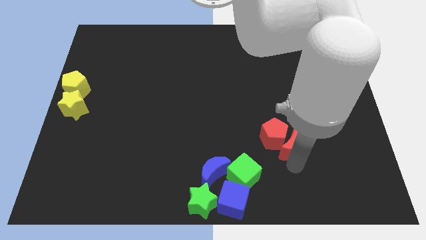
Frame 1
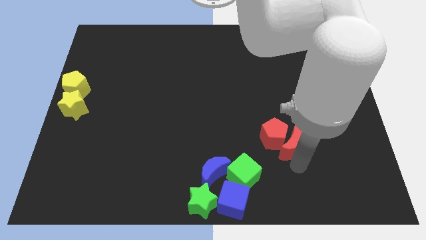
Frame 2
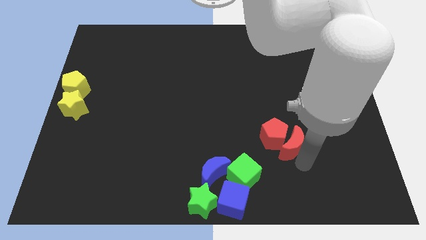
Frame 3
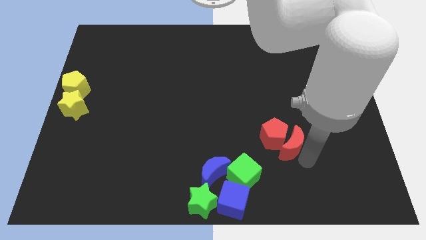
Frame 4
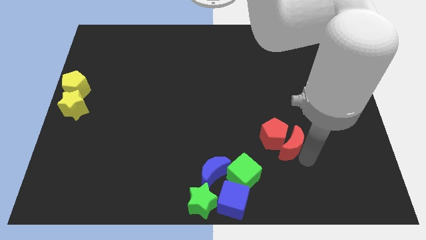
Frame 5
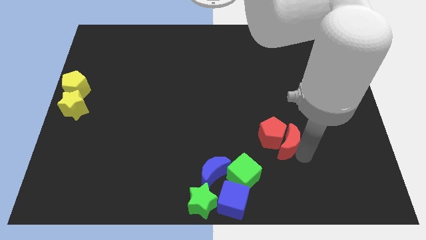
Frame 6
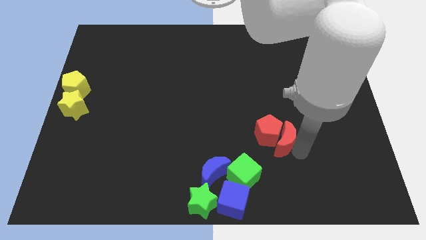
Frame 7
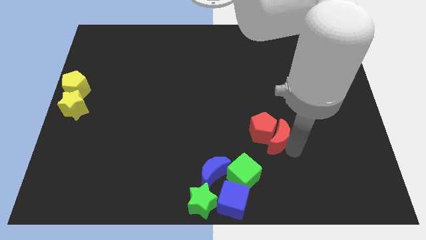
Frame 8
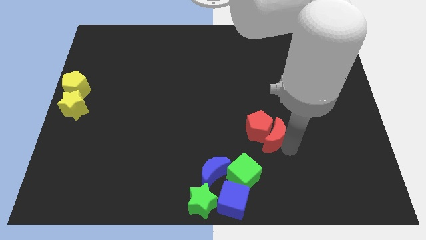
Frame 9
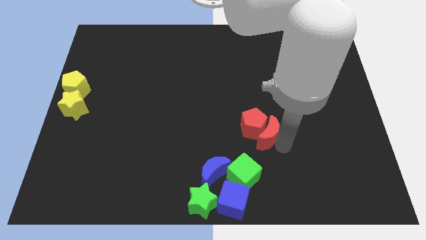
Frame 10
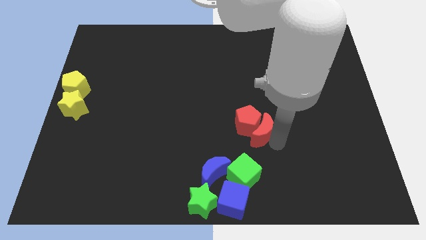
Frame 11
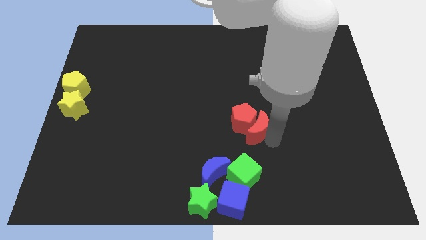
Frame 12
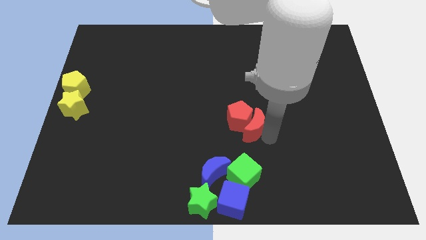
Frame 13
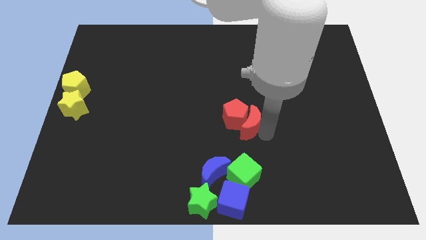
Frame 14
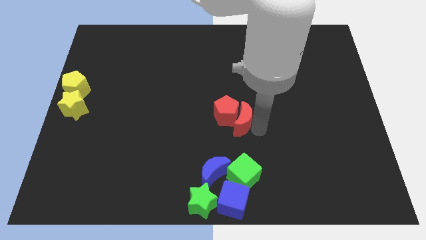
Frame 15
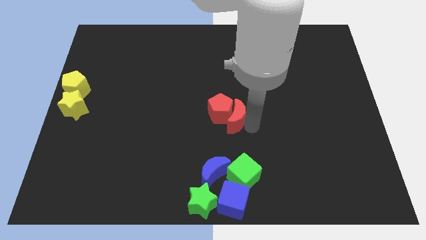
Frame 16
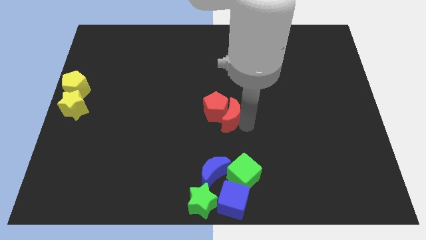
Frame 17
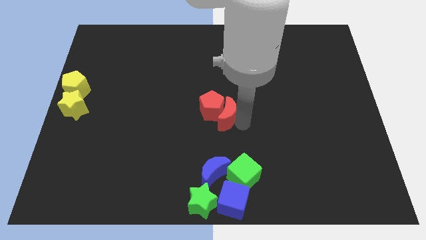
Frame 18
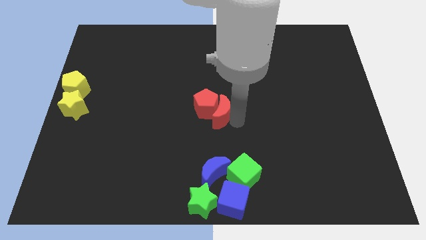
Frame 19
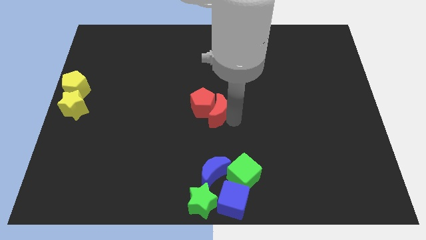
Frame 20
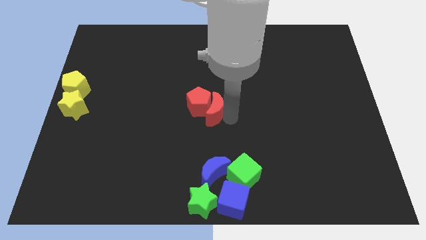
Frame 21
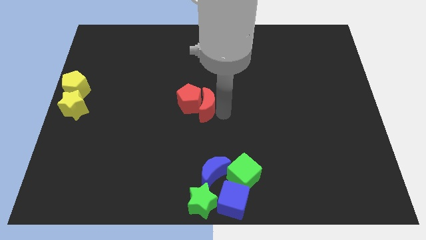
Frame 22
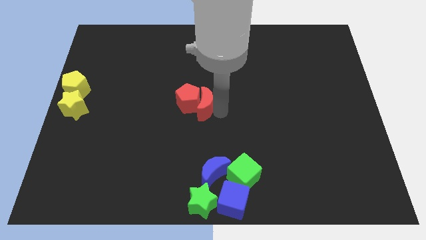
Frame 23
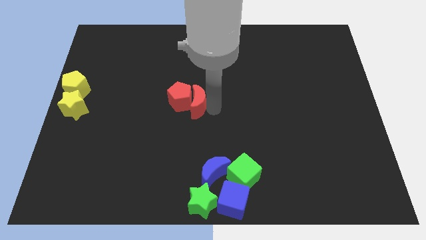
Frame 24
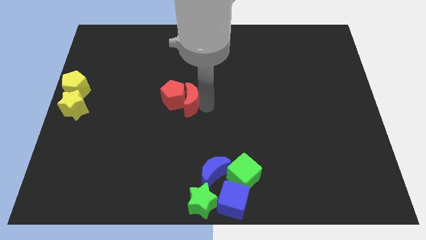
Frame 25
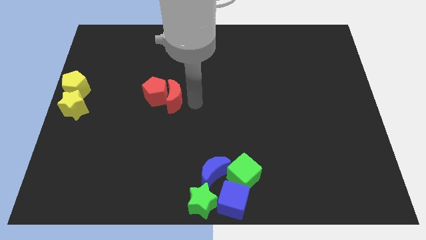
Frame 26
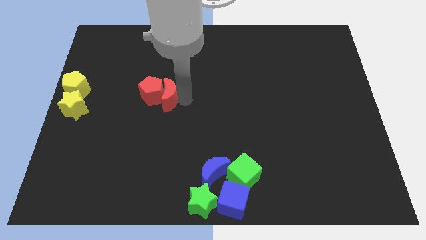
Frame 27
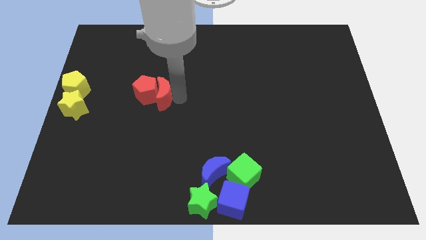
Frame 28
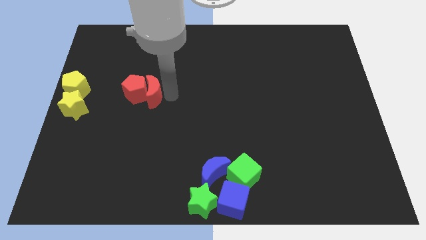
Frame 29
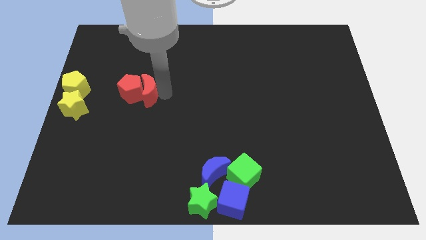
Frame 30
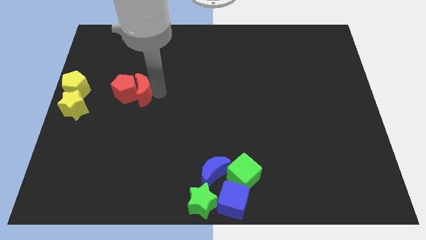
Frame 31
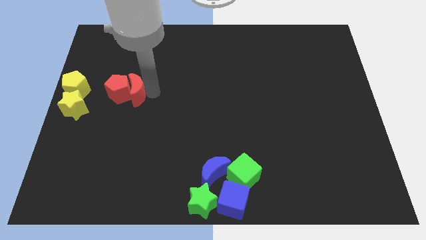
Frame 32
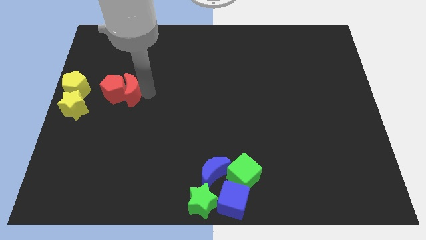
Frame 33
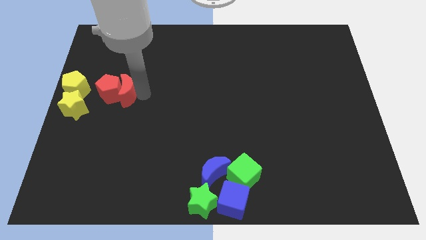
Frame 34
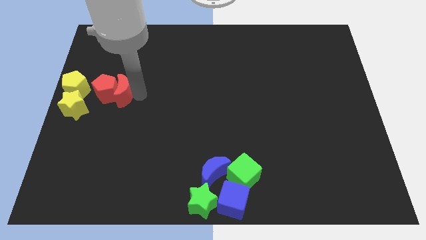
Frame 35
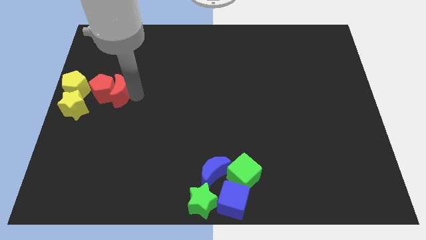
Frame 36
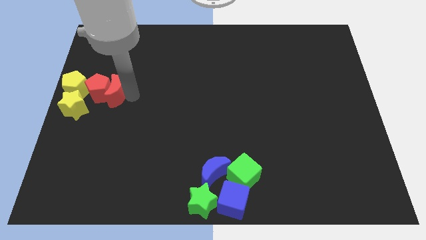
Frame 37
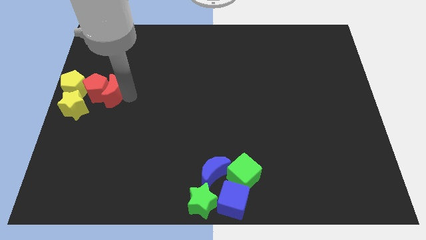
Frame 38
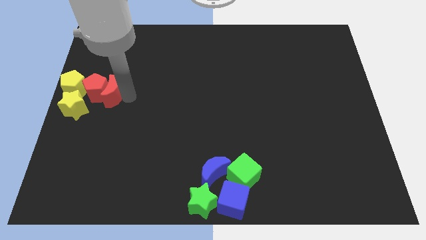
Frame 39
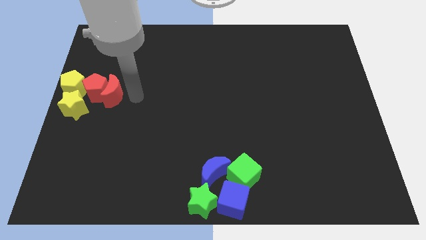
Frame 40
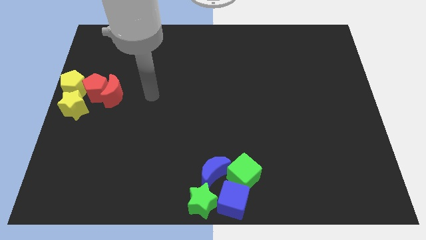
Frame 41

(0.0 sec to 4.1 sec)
push the red moon and red pentagon into the yellow pentagon

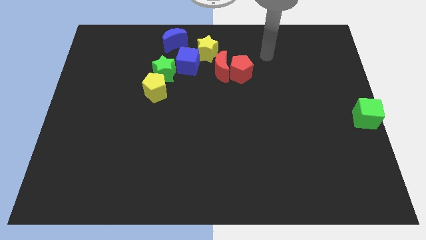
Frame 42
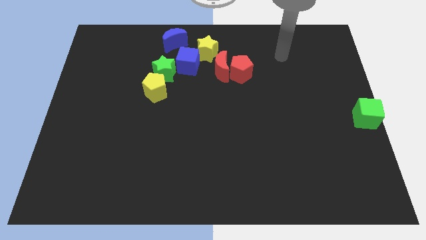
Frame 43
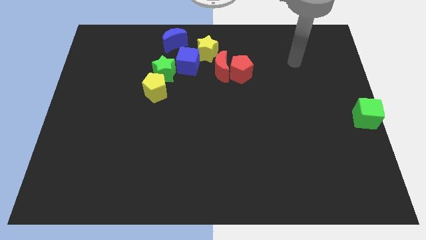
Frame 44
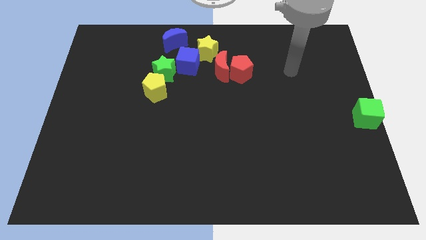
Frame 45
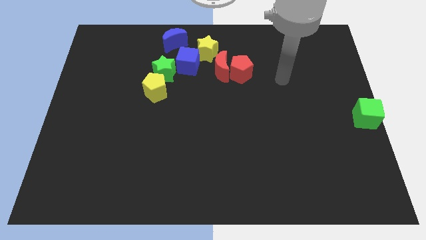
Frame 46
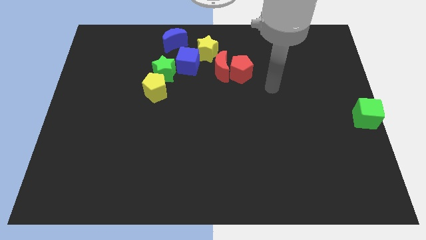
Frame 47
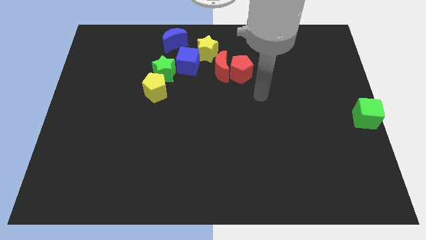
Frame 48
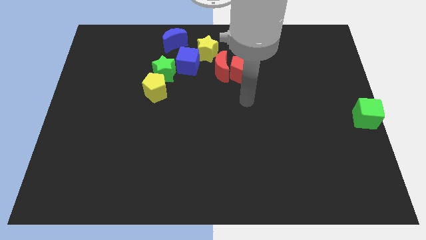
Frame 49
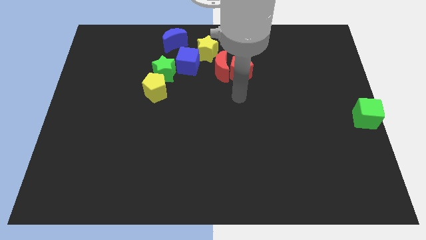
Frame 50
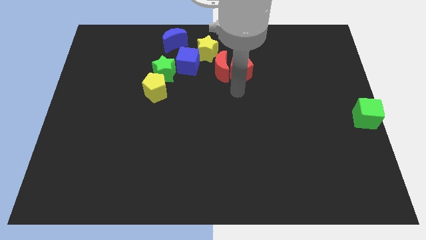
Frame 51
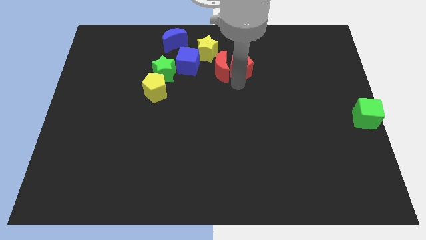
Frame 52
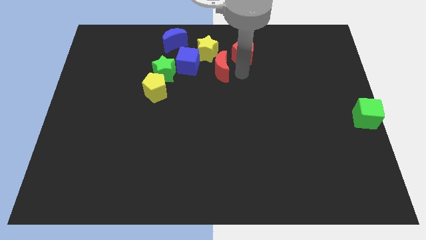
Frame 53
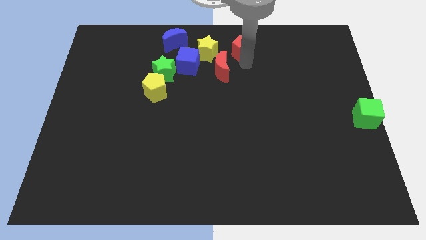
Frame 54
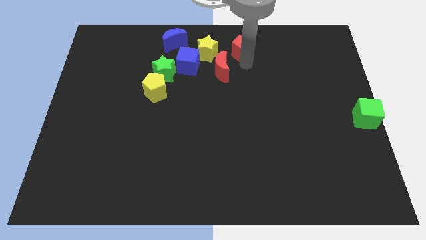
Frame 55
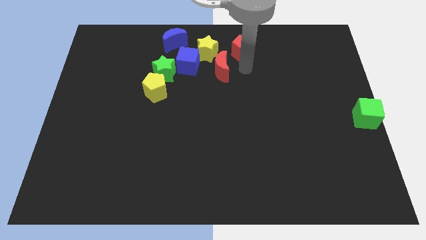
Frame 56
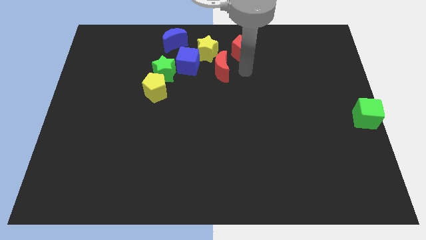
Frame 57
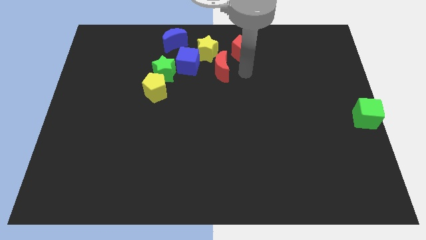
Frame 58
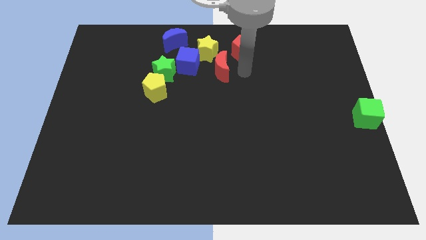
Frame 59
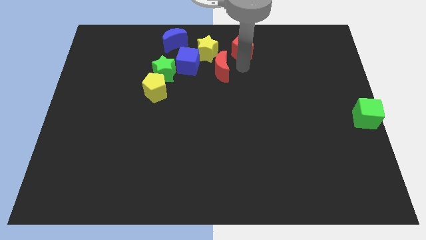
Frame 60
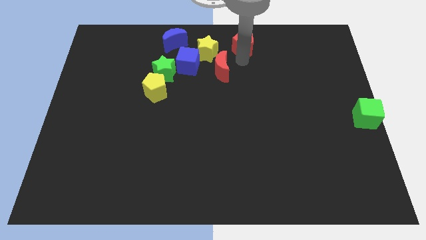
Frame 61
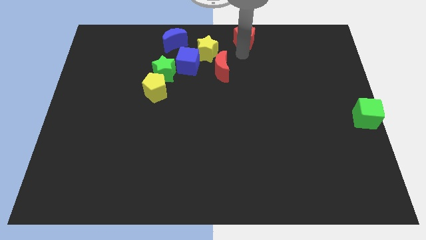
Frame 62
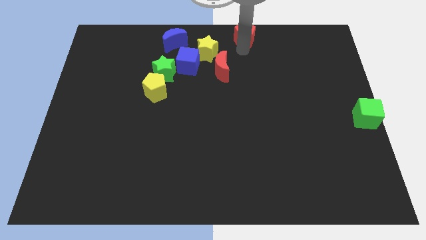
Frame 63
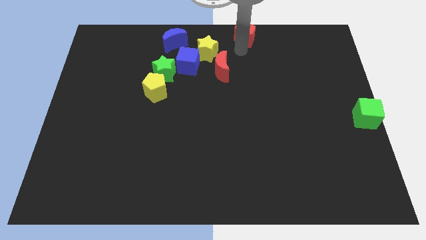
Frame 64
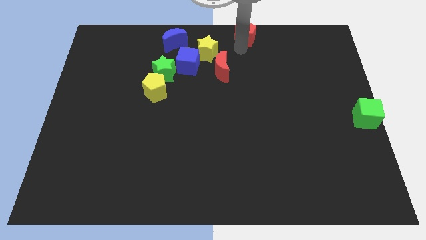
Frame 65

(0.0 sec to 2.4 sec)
push the red pentagon towards the top

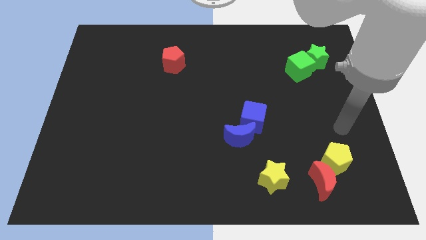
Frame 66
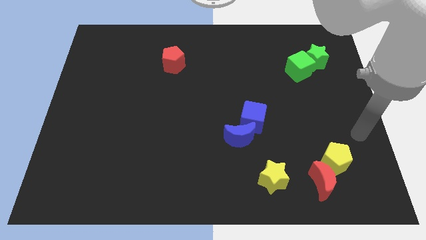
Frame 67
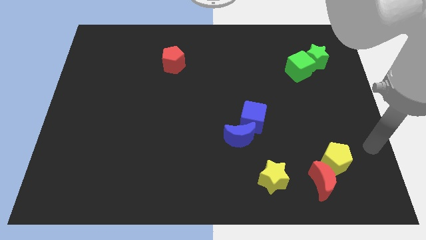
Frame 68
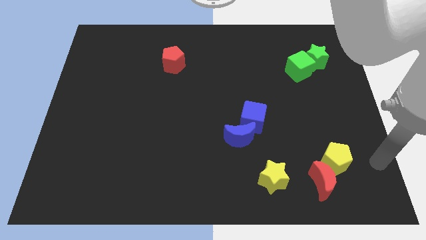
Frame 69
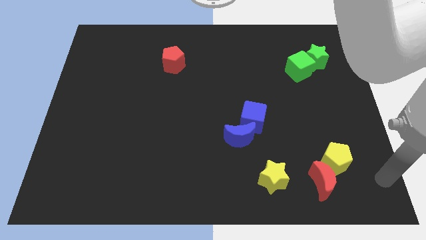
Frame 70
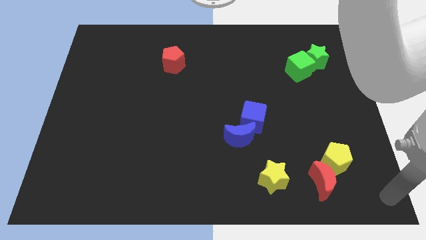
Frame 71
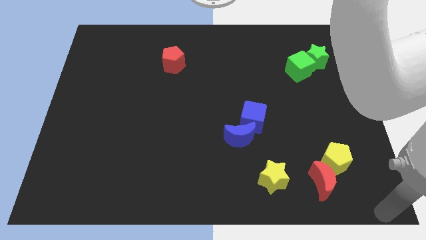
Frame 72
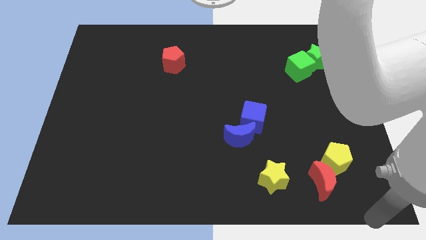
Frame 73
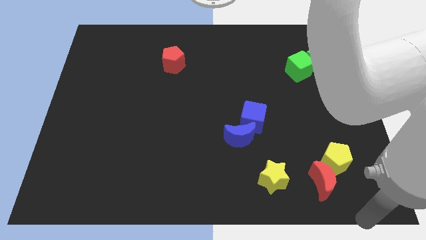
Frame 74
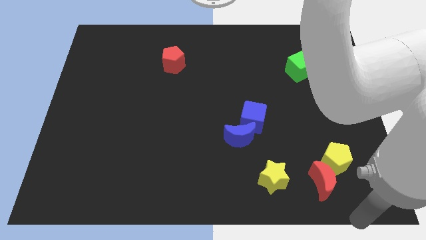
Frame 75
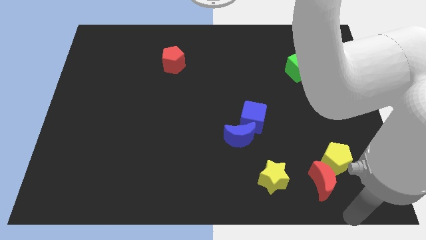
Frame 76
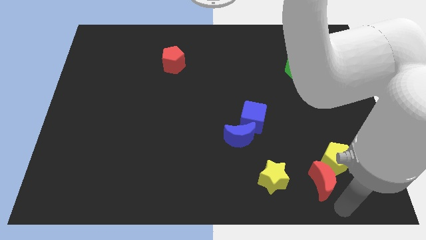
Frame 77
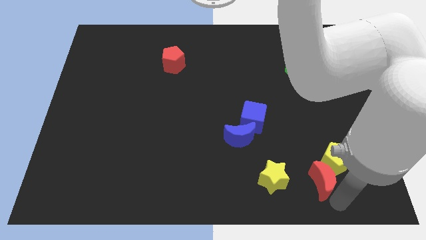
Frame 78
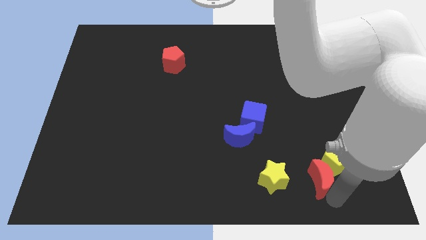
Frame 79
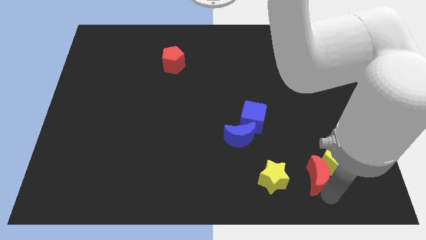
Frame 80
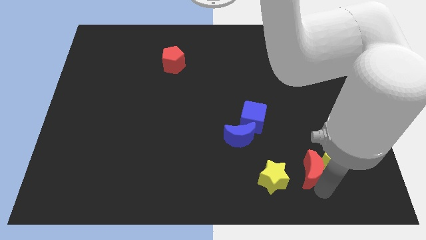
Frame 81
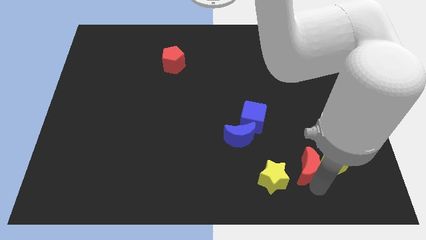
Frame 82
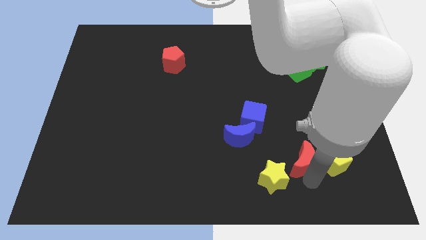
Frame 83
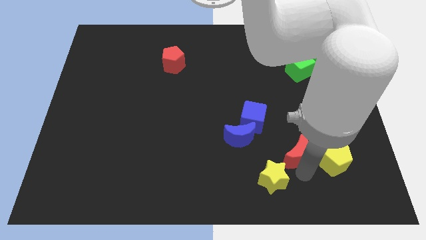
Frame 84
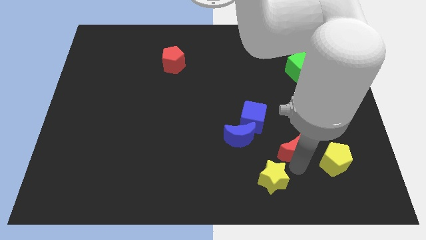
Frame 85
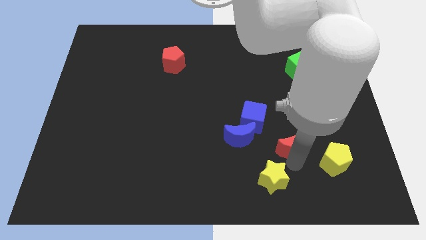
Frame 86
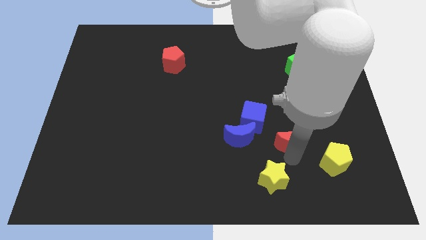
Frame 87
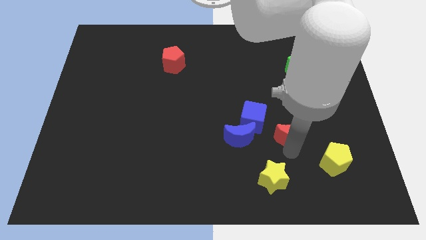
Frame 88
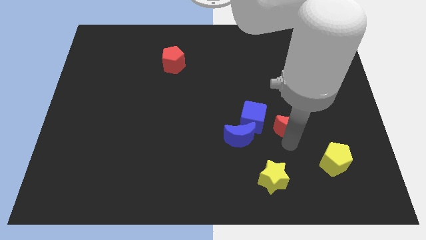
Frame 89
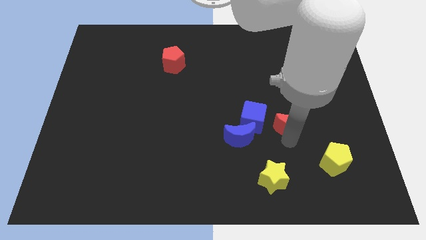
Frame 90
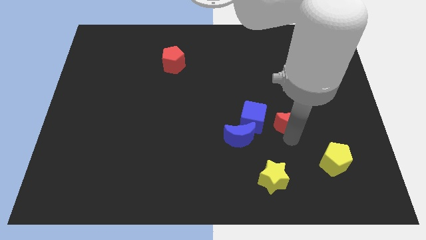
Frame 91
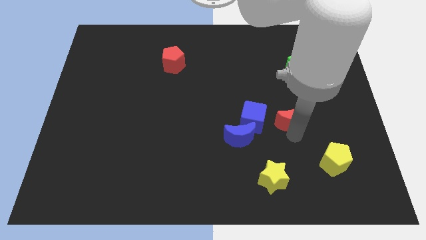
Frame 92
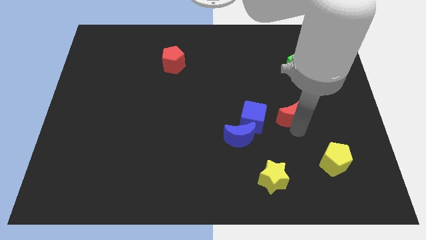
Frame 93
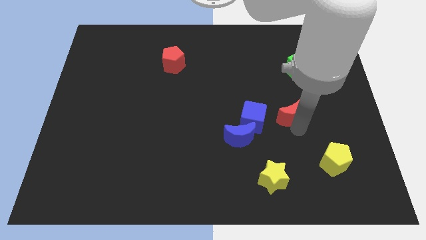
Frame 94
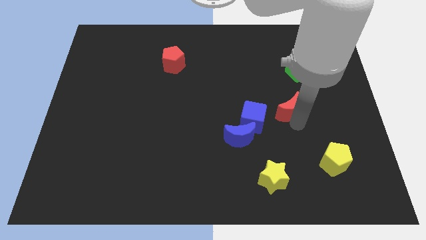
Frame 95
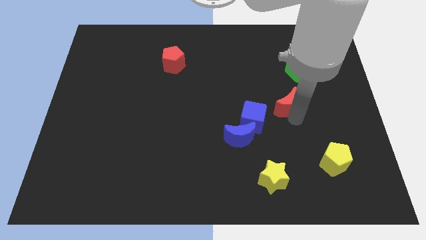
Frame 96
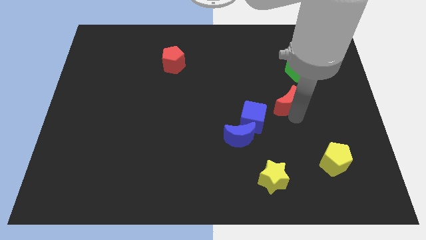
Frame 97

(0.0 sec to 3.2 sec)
separate red moon from yellow pentagon
